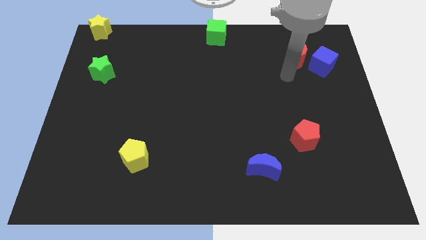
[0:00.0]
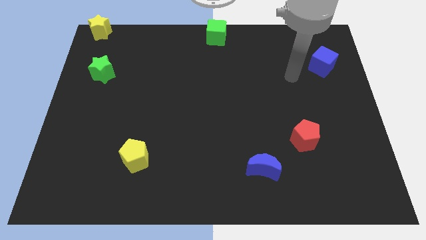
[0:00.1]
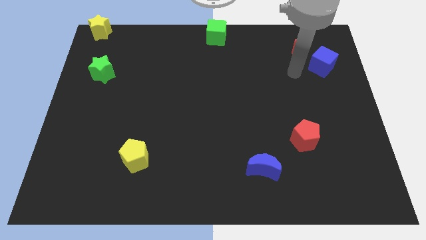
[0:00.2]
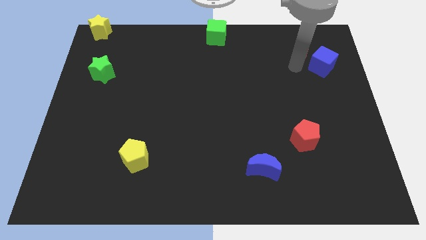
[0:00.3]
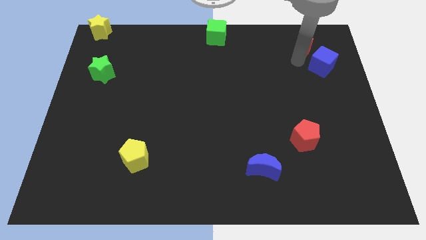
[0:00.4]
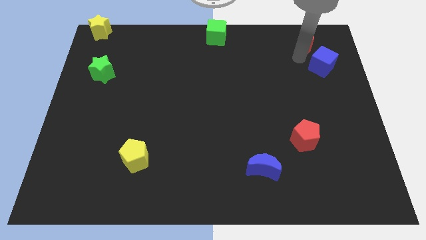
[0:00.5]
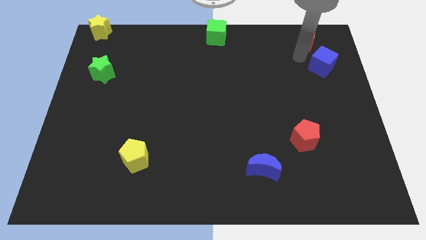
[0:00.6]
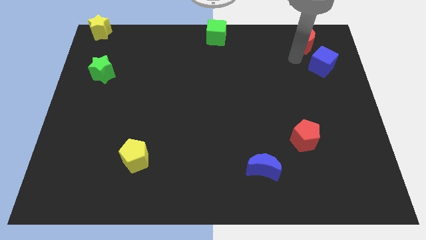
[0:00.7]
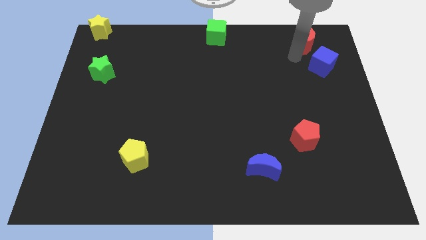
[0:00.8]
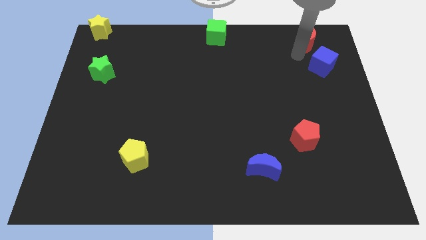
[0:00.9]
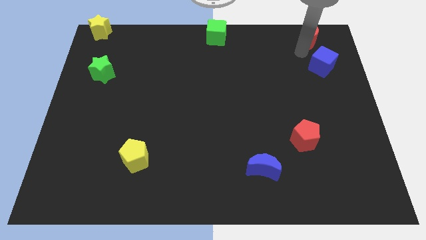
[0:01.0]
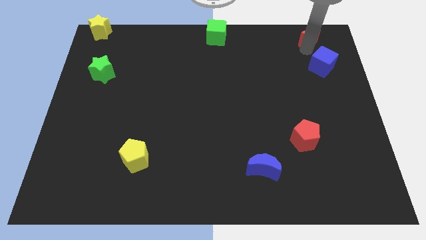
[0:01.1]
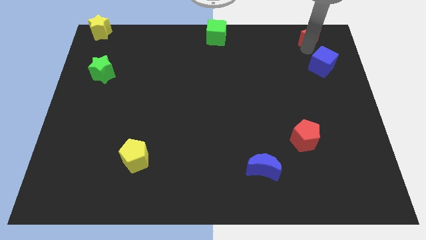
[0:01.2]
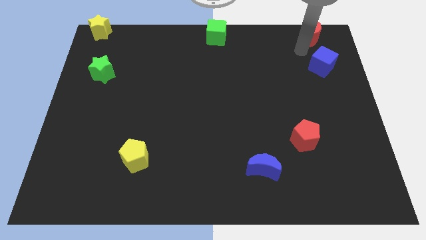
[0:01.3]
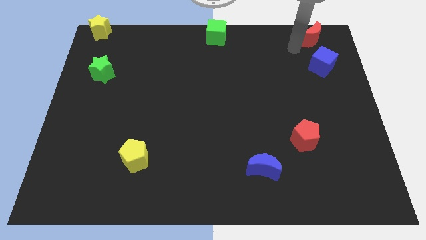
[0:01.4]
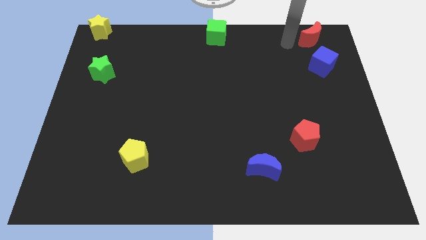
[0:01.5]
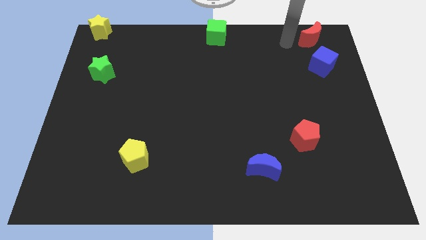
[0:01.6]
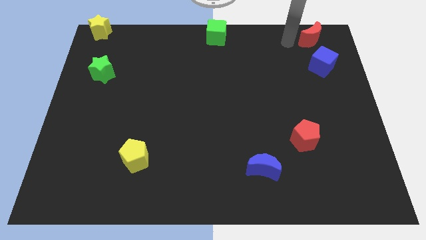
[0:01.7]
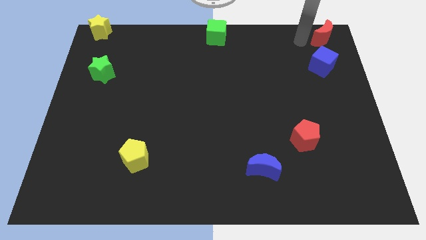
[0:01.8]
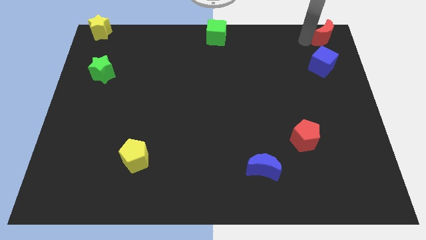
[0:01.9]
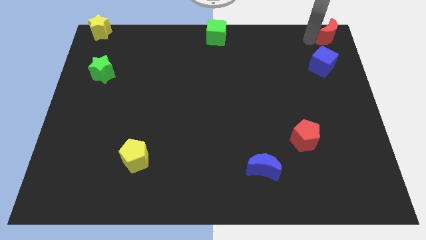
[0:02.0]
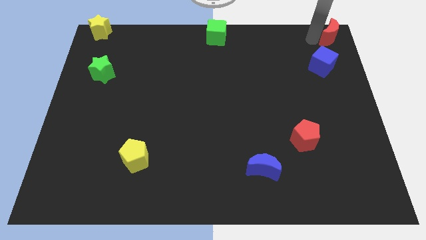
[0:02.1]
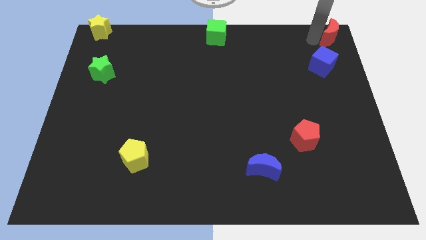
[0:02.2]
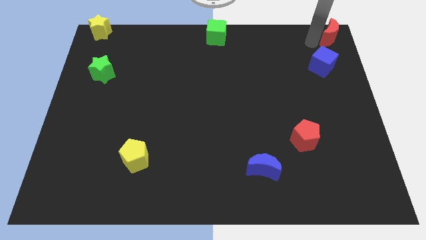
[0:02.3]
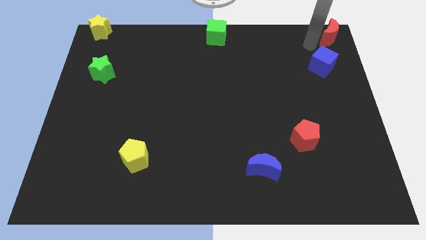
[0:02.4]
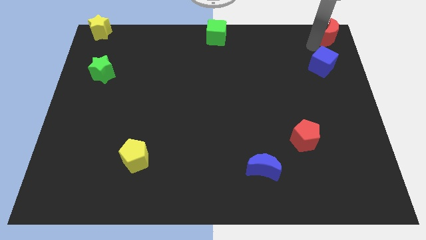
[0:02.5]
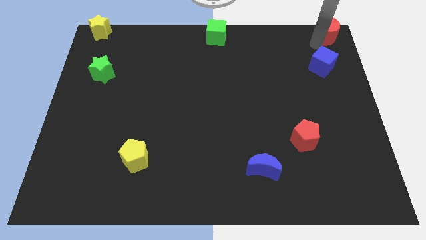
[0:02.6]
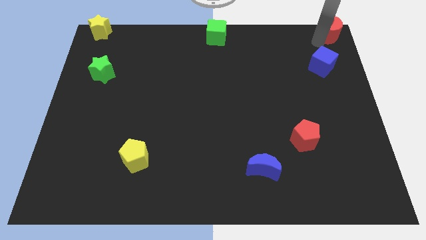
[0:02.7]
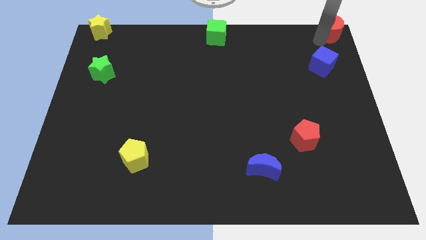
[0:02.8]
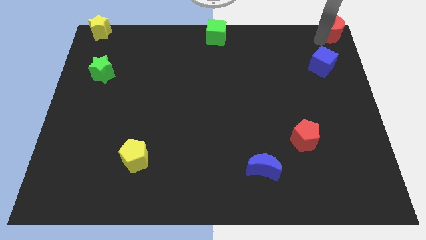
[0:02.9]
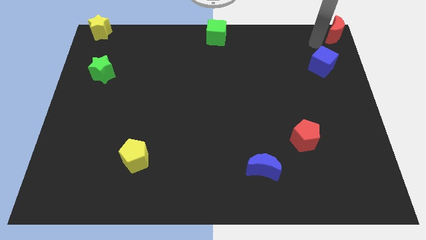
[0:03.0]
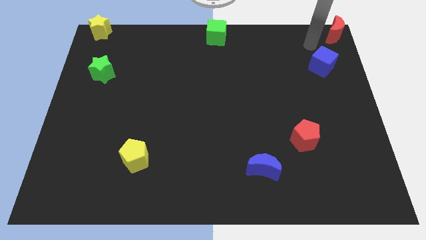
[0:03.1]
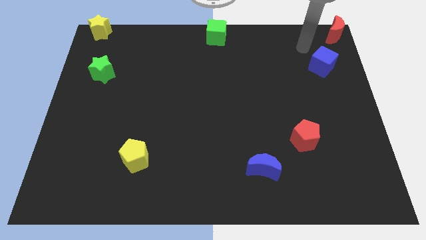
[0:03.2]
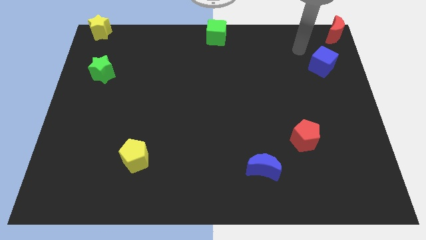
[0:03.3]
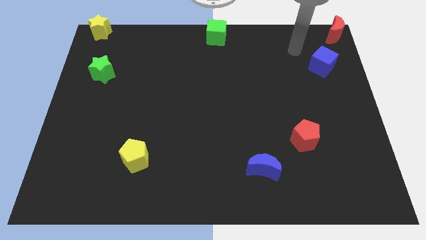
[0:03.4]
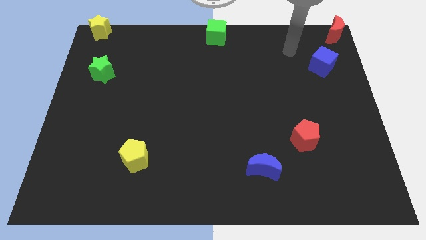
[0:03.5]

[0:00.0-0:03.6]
push the red moon to the top right of the board

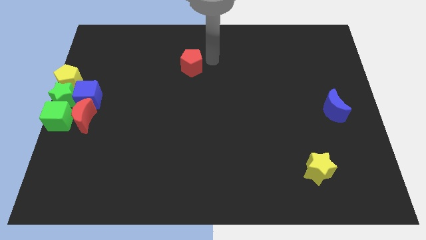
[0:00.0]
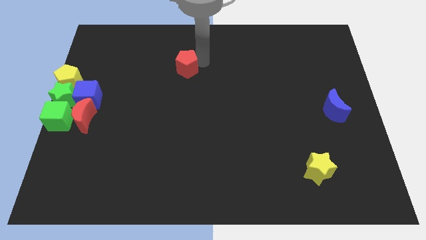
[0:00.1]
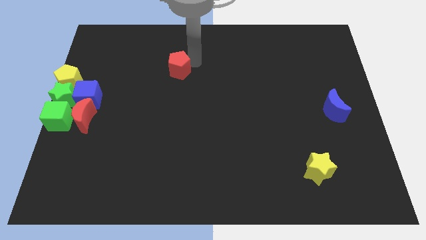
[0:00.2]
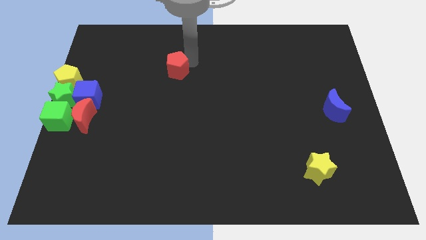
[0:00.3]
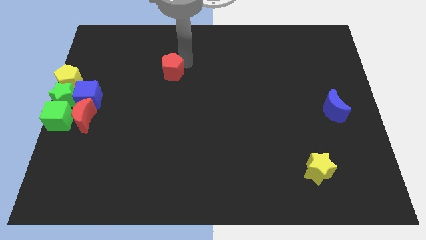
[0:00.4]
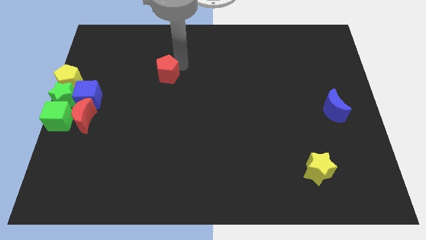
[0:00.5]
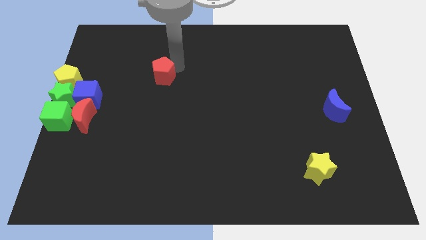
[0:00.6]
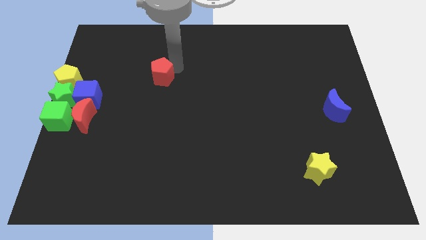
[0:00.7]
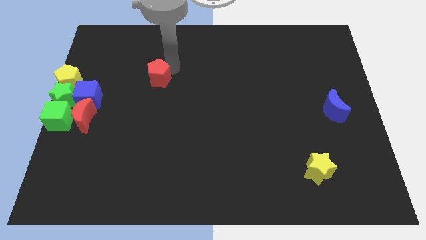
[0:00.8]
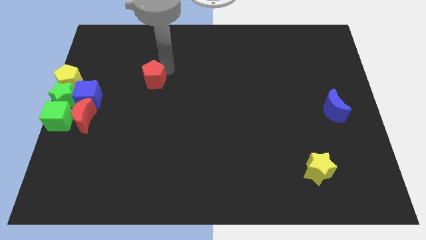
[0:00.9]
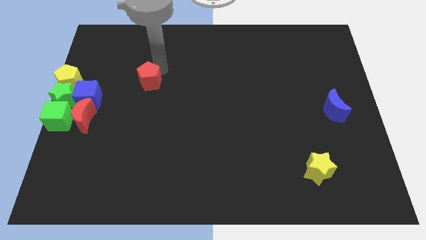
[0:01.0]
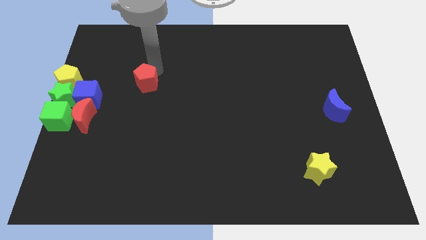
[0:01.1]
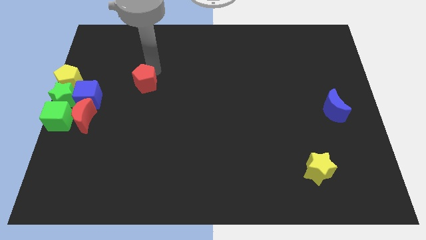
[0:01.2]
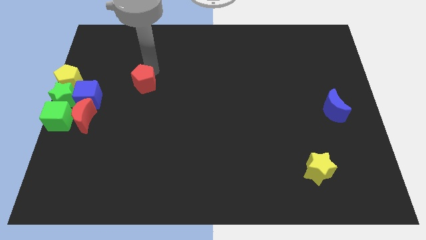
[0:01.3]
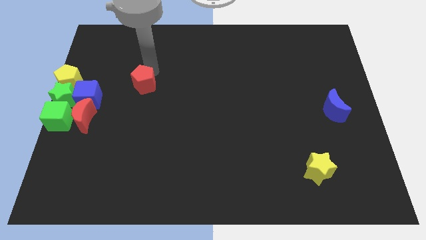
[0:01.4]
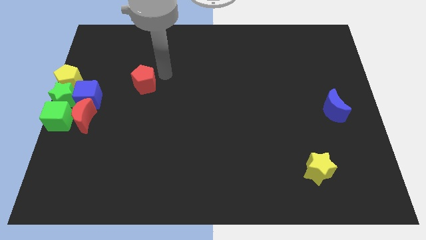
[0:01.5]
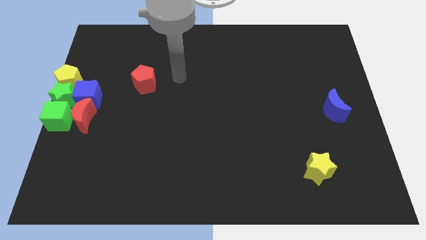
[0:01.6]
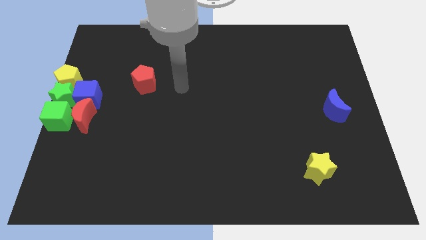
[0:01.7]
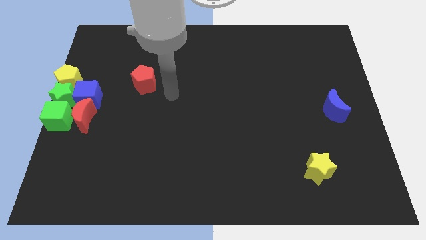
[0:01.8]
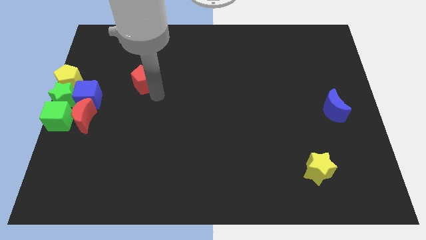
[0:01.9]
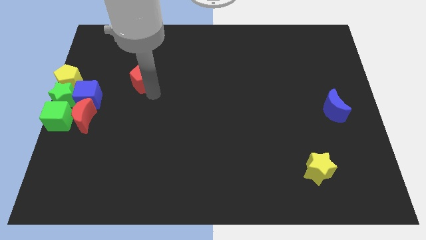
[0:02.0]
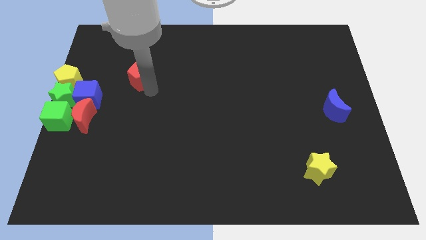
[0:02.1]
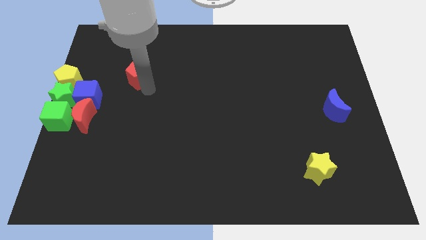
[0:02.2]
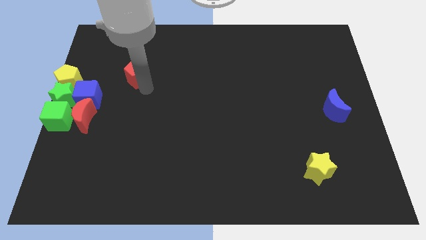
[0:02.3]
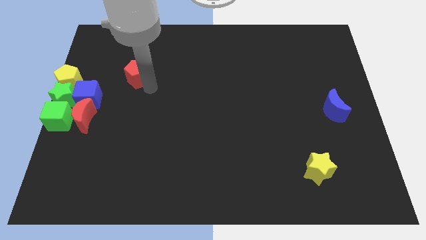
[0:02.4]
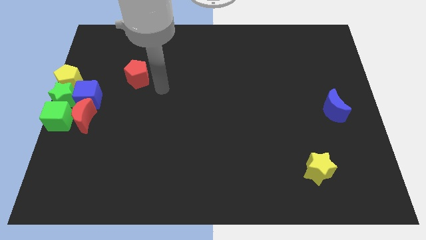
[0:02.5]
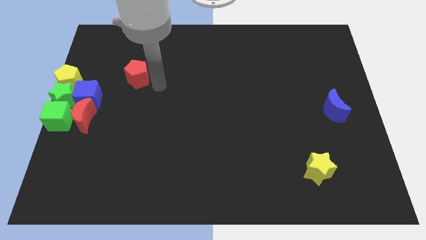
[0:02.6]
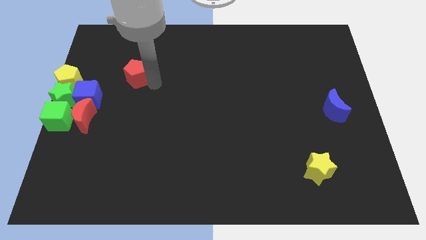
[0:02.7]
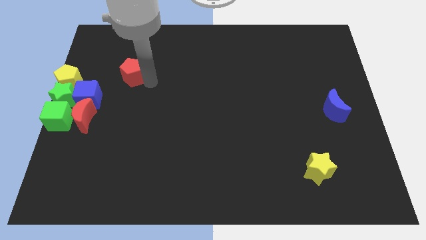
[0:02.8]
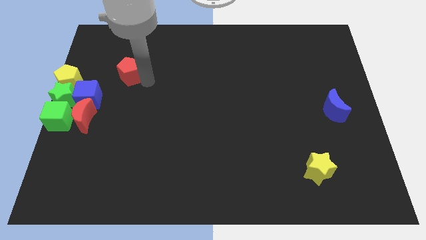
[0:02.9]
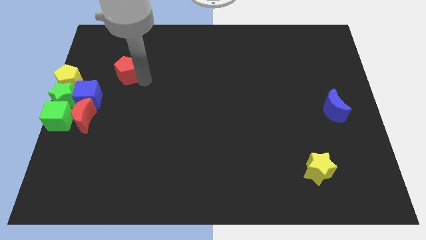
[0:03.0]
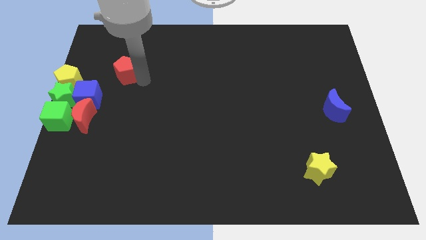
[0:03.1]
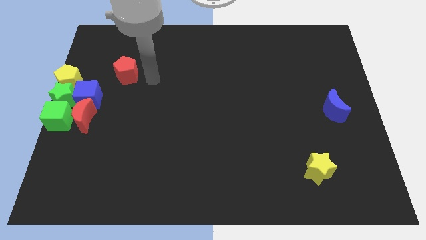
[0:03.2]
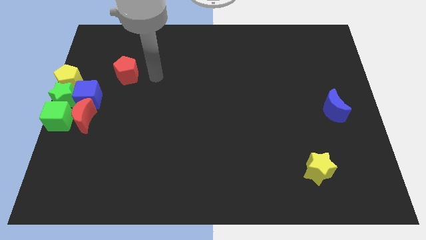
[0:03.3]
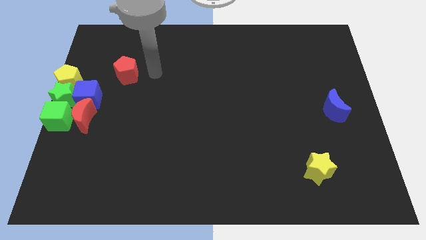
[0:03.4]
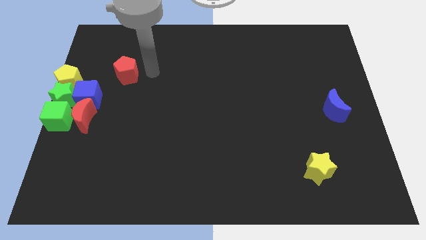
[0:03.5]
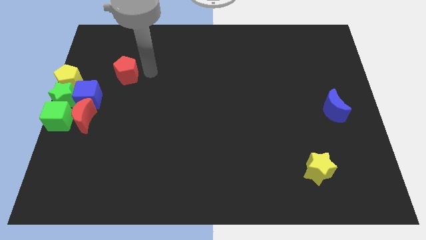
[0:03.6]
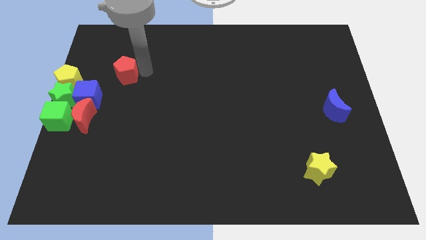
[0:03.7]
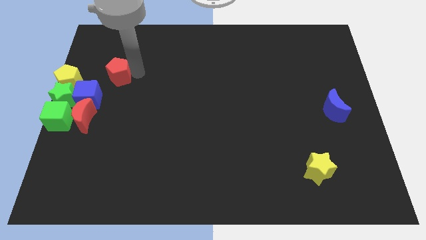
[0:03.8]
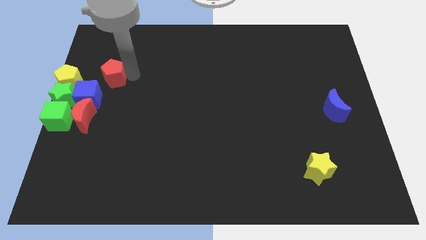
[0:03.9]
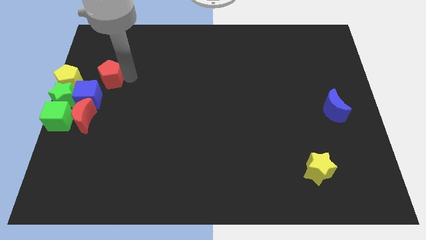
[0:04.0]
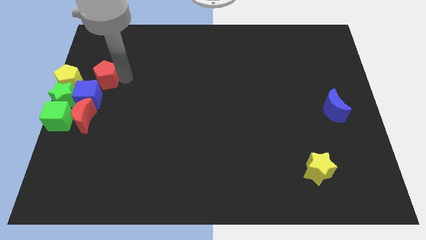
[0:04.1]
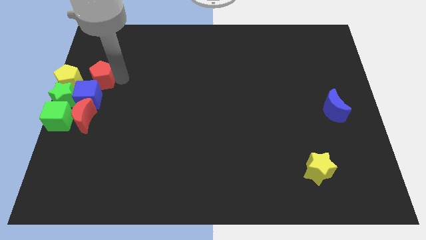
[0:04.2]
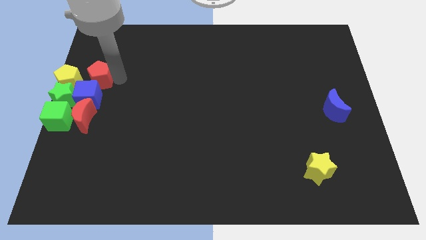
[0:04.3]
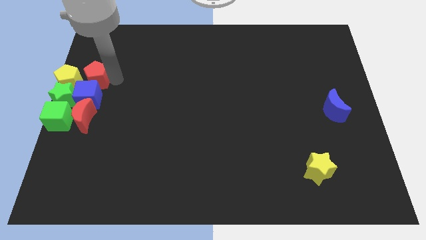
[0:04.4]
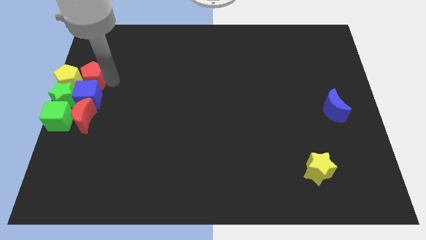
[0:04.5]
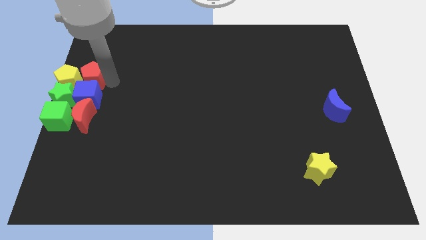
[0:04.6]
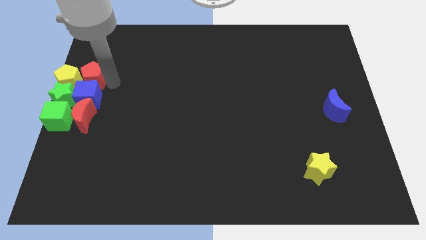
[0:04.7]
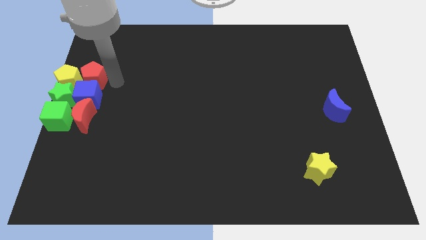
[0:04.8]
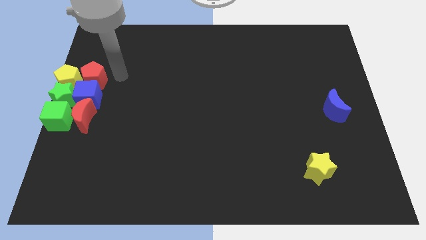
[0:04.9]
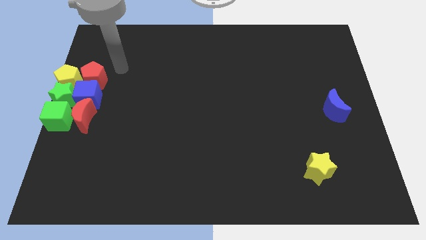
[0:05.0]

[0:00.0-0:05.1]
move the red pentagon towards the right side of the yellow pentagon

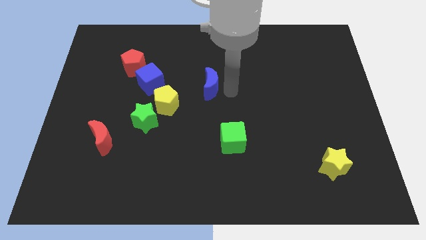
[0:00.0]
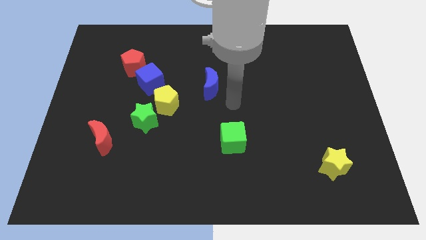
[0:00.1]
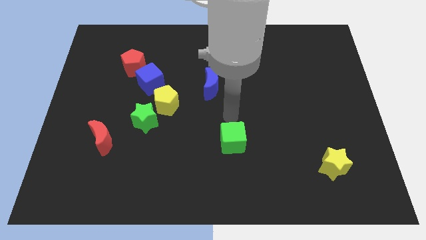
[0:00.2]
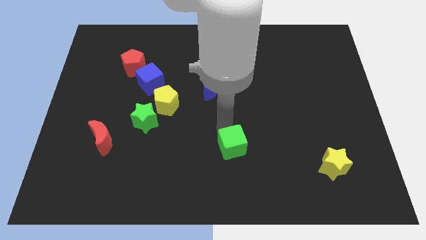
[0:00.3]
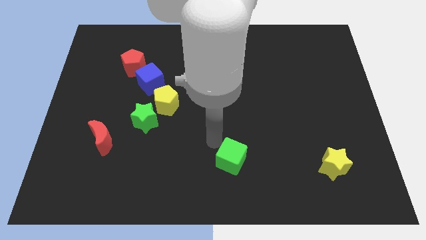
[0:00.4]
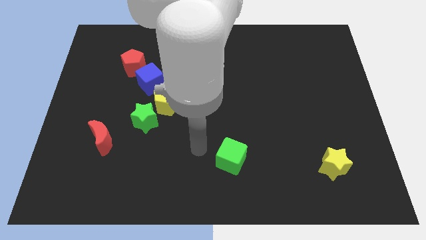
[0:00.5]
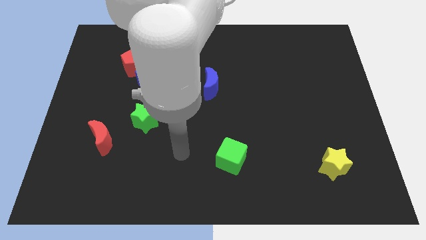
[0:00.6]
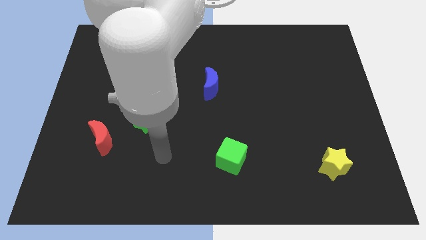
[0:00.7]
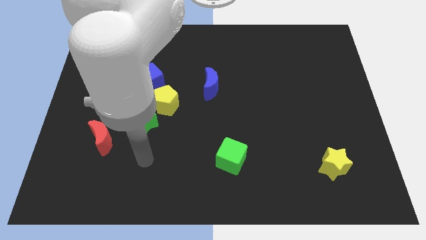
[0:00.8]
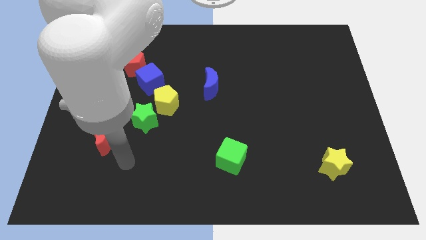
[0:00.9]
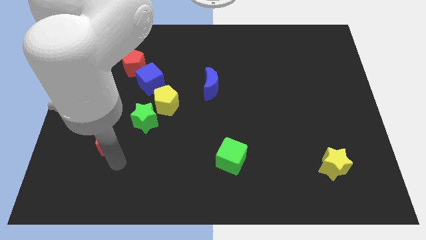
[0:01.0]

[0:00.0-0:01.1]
push the green cube slightly towards the bottom
